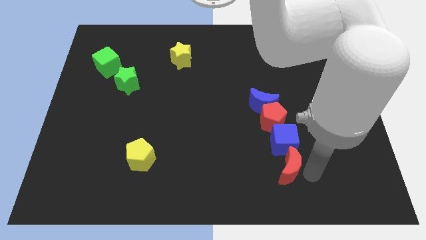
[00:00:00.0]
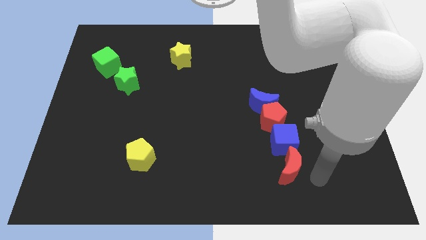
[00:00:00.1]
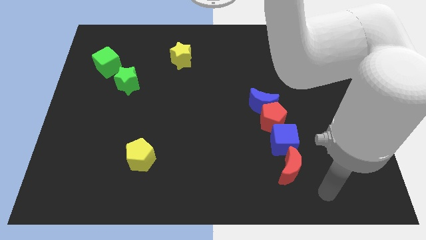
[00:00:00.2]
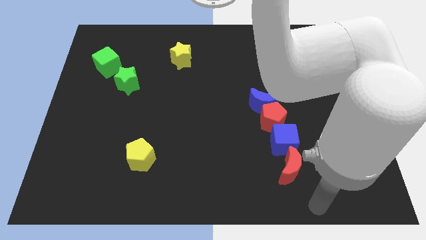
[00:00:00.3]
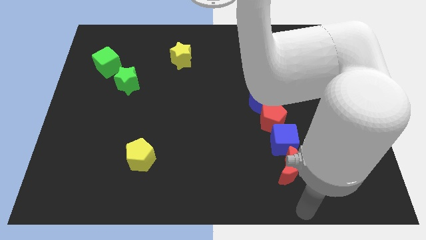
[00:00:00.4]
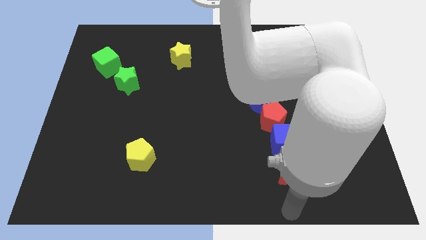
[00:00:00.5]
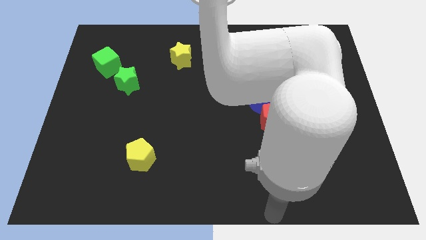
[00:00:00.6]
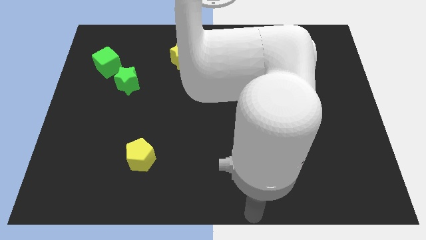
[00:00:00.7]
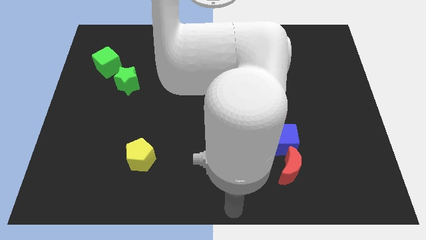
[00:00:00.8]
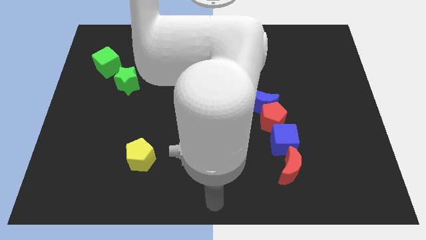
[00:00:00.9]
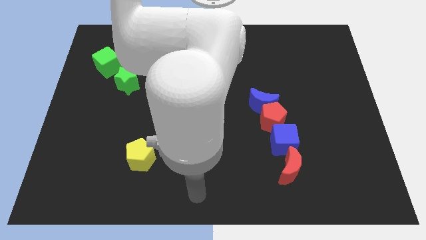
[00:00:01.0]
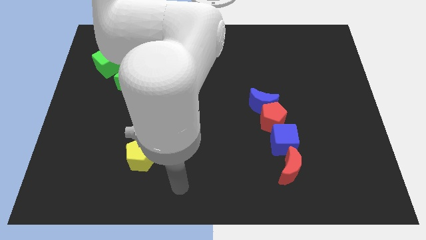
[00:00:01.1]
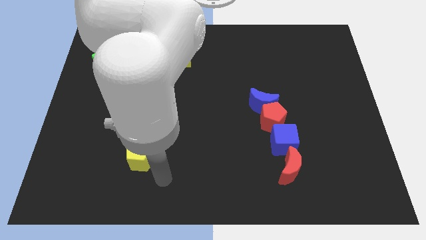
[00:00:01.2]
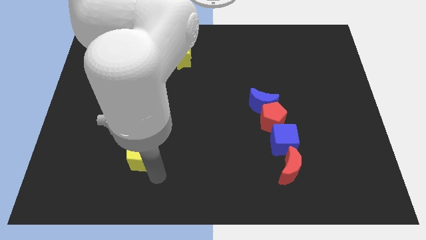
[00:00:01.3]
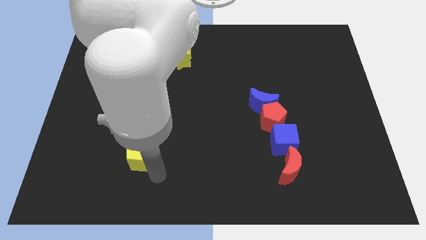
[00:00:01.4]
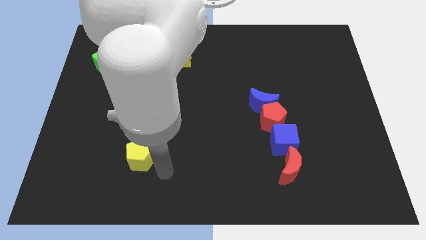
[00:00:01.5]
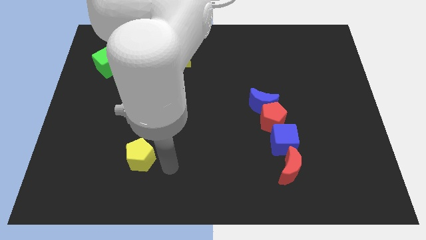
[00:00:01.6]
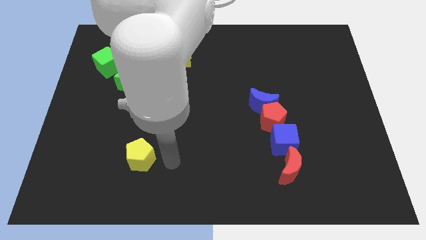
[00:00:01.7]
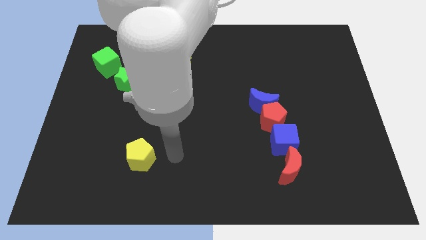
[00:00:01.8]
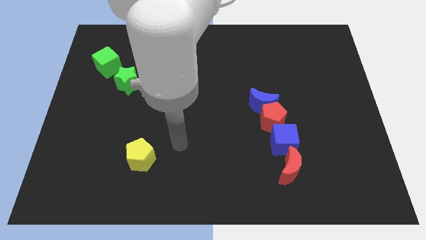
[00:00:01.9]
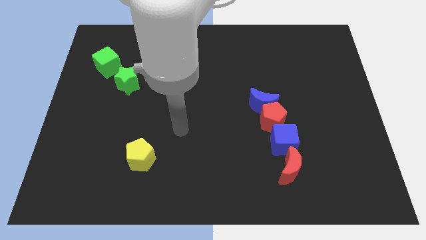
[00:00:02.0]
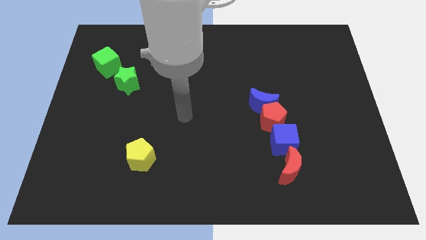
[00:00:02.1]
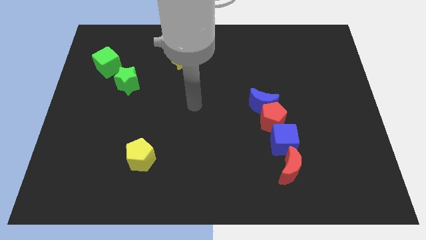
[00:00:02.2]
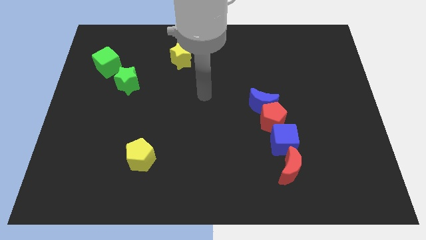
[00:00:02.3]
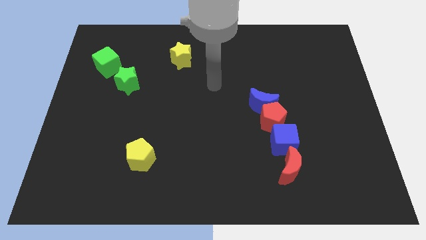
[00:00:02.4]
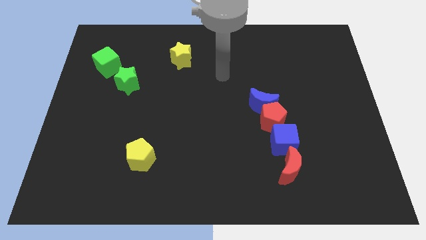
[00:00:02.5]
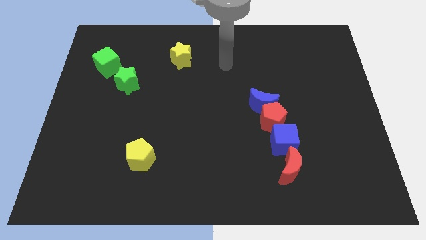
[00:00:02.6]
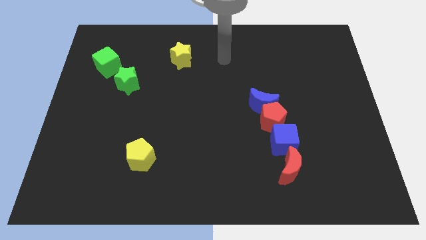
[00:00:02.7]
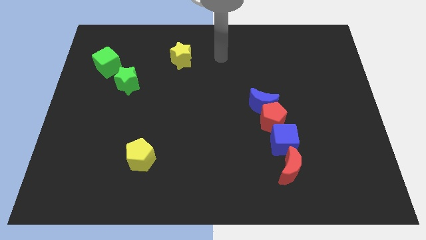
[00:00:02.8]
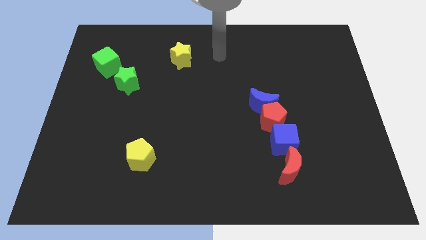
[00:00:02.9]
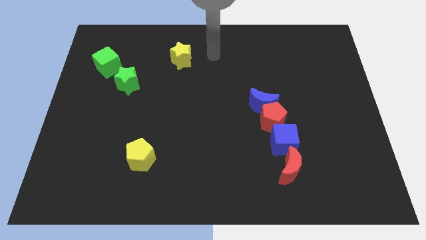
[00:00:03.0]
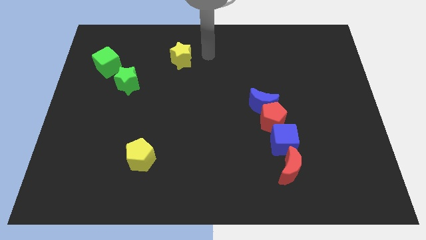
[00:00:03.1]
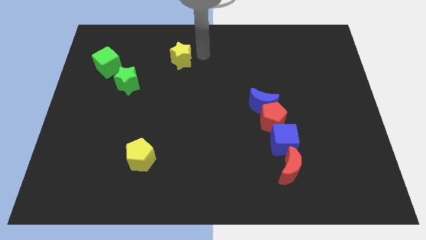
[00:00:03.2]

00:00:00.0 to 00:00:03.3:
move your arm away from the red crescent

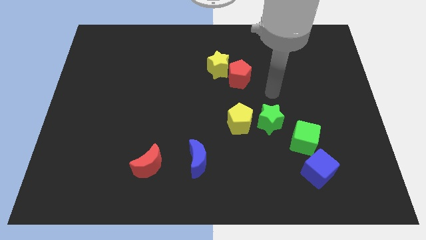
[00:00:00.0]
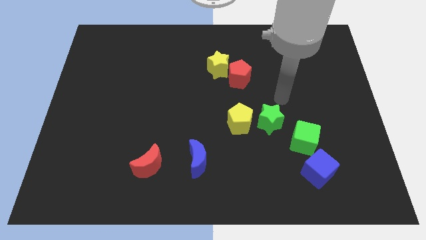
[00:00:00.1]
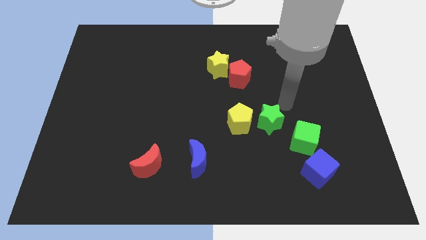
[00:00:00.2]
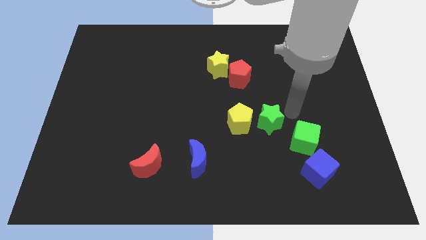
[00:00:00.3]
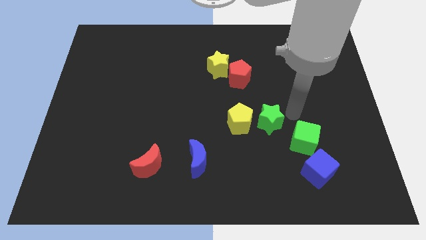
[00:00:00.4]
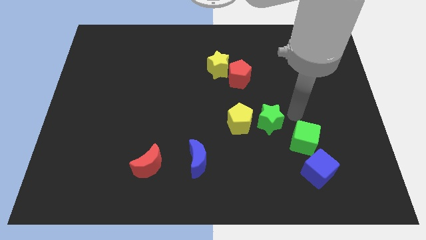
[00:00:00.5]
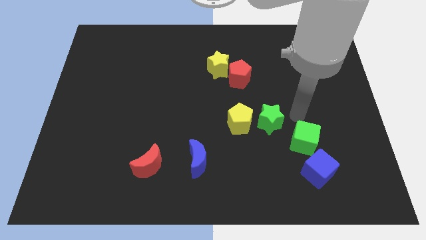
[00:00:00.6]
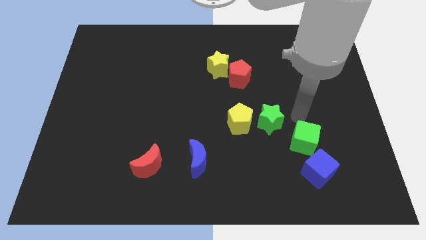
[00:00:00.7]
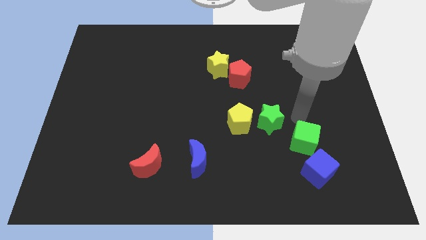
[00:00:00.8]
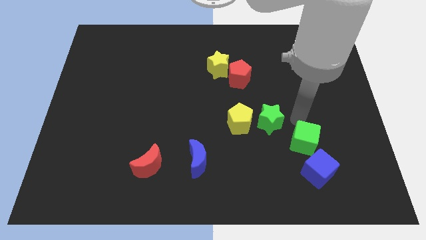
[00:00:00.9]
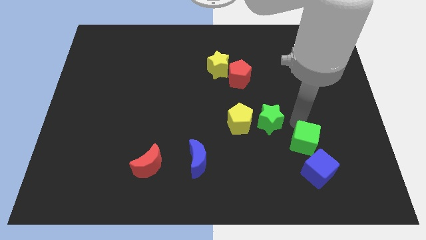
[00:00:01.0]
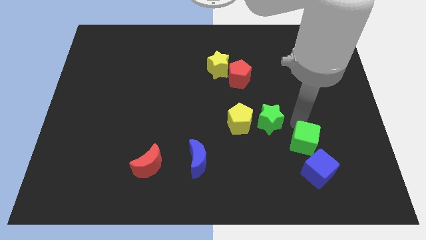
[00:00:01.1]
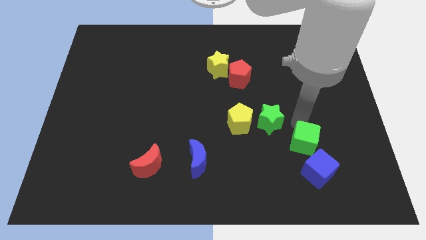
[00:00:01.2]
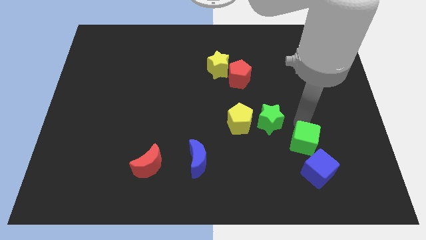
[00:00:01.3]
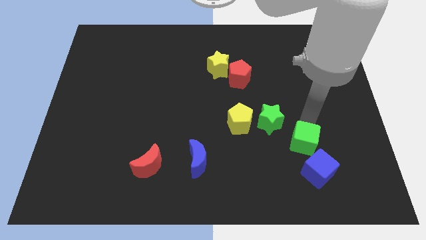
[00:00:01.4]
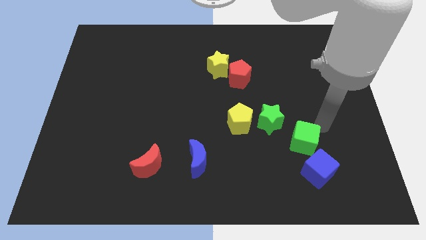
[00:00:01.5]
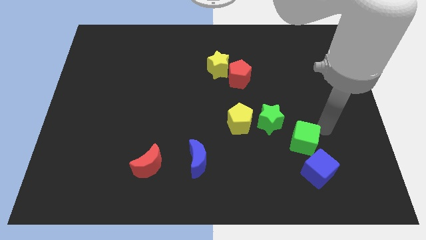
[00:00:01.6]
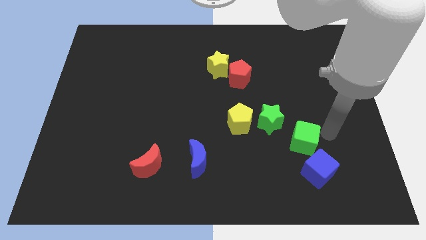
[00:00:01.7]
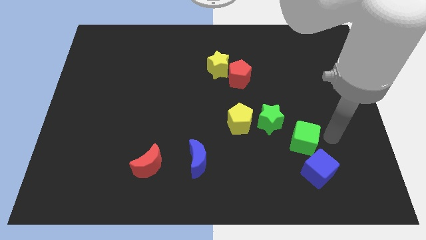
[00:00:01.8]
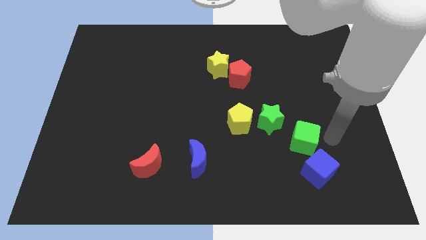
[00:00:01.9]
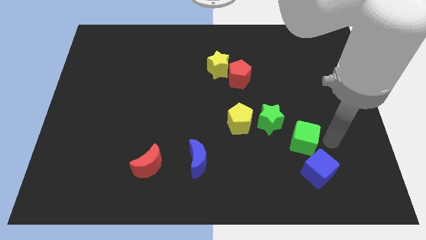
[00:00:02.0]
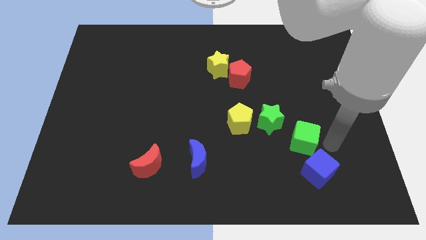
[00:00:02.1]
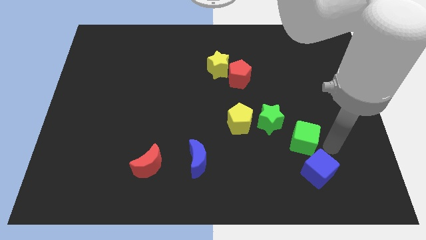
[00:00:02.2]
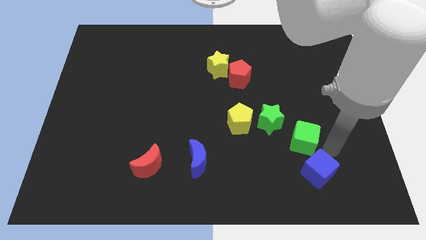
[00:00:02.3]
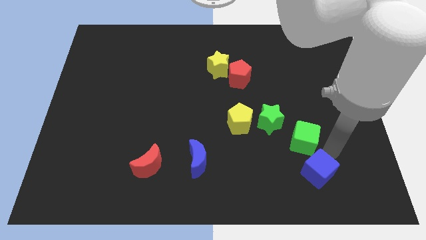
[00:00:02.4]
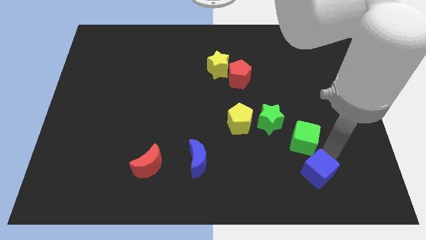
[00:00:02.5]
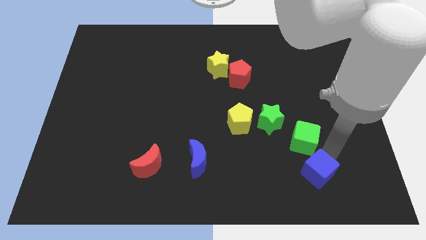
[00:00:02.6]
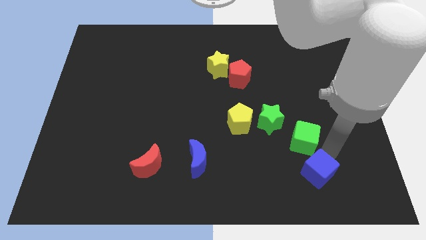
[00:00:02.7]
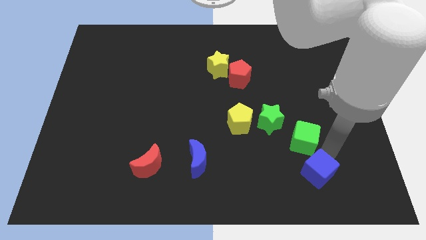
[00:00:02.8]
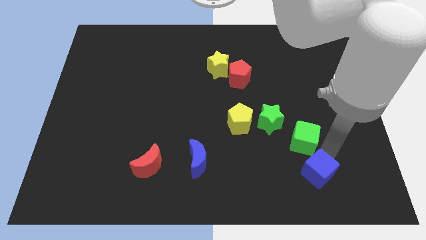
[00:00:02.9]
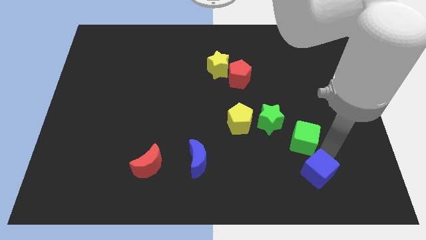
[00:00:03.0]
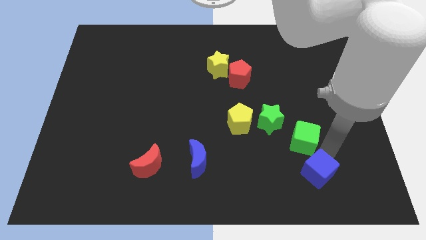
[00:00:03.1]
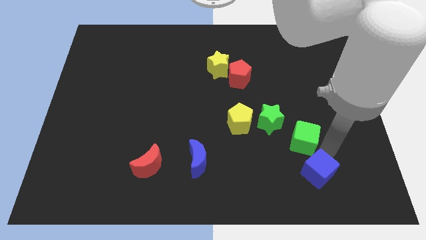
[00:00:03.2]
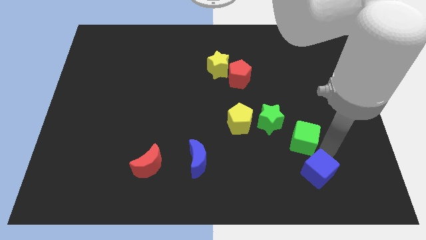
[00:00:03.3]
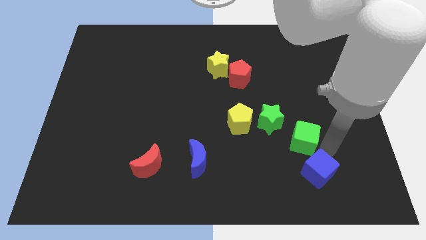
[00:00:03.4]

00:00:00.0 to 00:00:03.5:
move arm close to blue cube

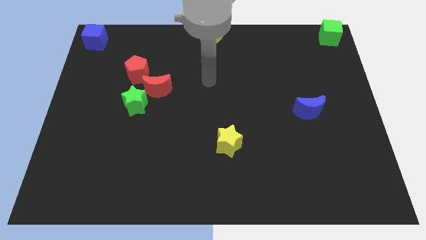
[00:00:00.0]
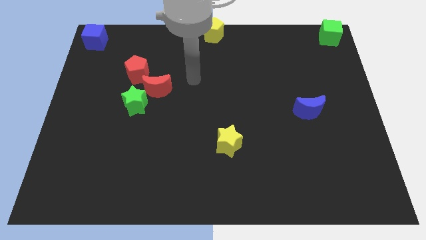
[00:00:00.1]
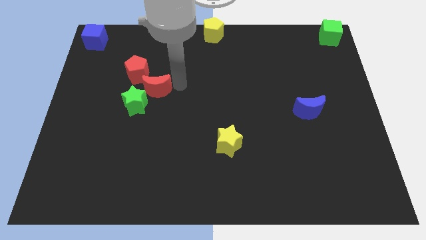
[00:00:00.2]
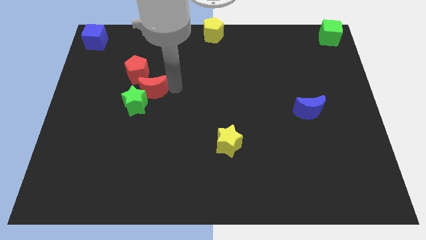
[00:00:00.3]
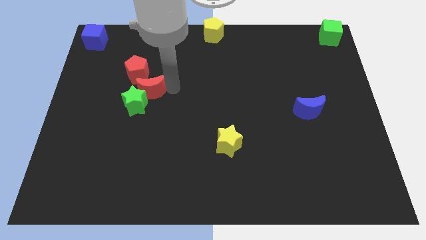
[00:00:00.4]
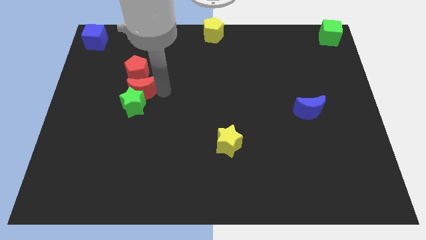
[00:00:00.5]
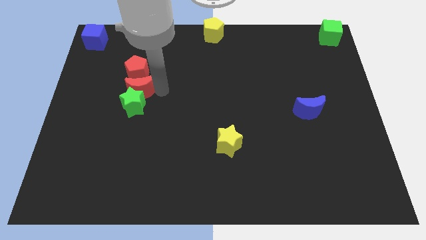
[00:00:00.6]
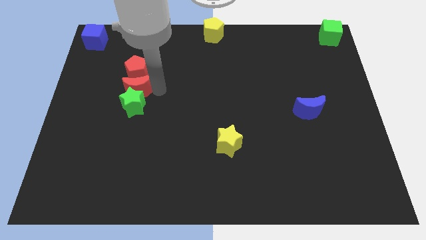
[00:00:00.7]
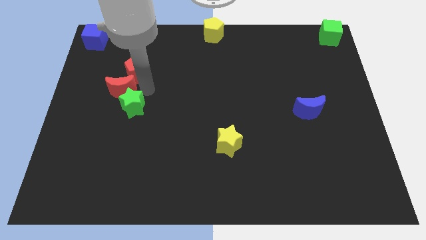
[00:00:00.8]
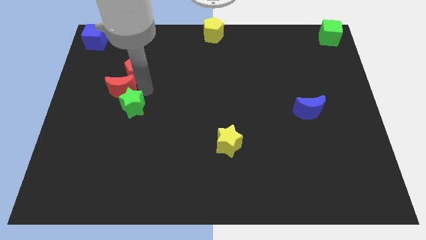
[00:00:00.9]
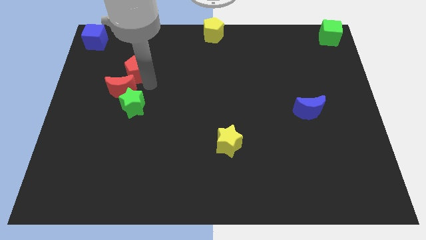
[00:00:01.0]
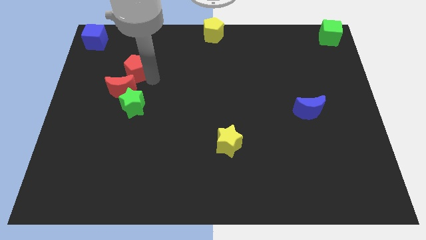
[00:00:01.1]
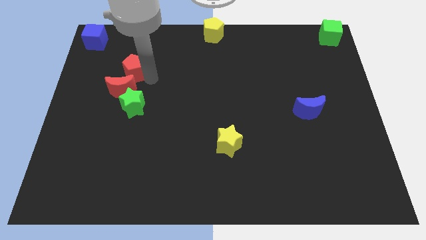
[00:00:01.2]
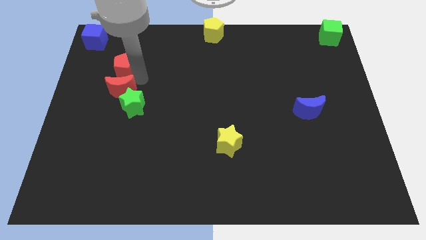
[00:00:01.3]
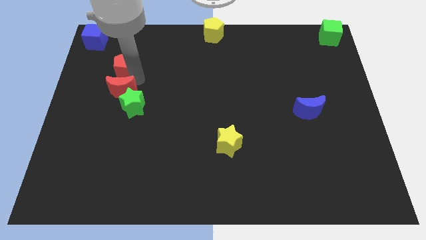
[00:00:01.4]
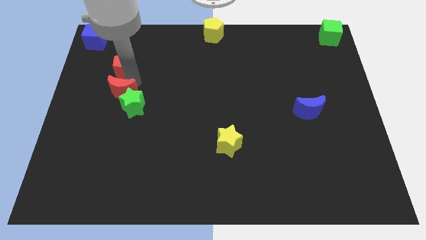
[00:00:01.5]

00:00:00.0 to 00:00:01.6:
place the red crescent to the top of the green star

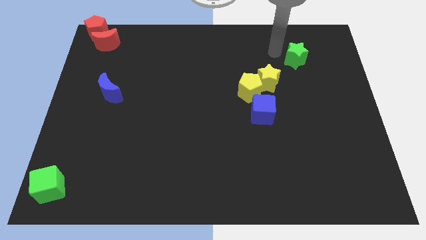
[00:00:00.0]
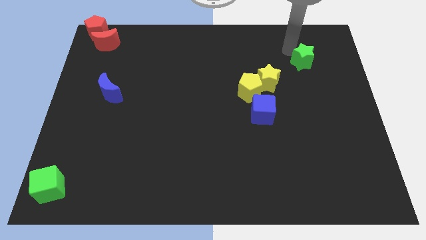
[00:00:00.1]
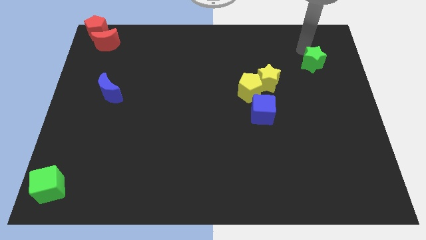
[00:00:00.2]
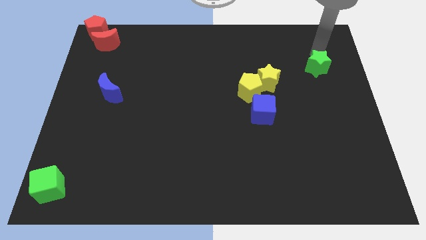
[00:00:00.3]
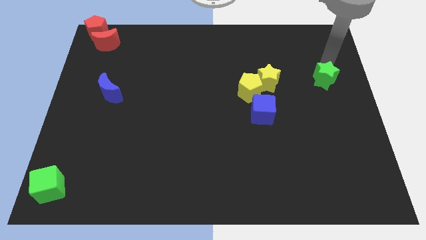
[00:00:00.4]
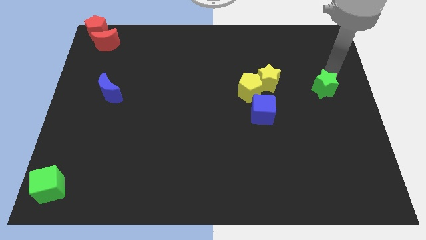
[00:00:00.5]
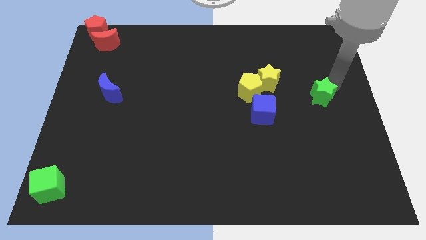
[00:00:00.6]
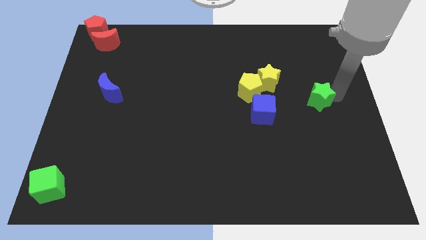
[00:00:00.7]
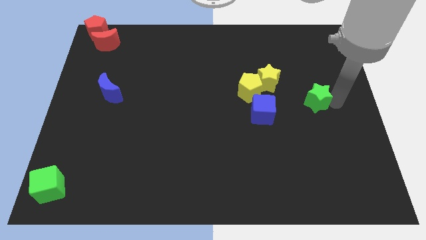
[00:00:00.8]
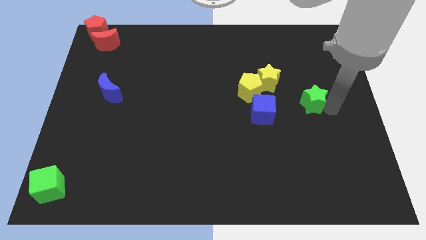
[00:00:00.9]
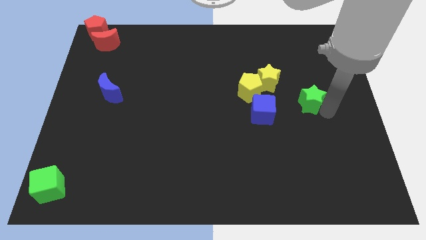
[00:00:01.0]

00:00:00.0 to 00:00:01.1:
push the green star to the right of the blue cube
